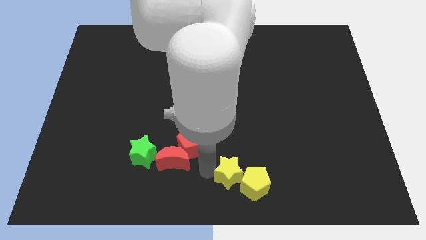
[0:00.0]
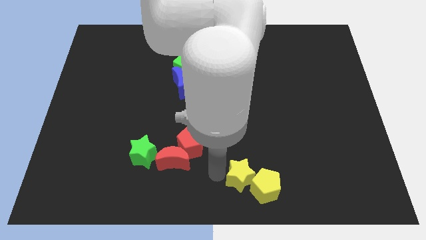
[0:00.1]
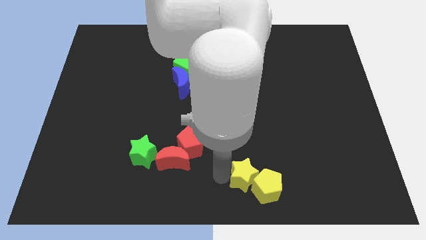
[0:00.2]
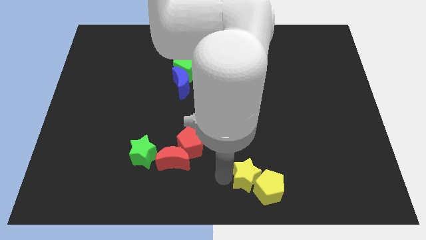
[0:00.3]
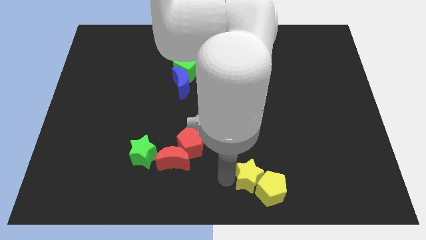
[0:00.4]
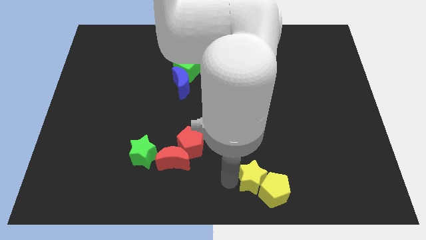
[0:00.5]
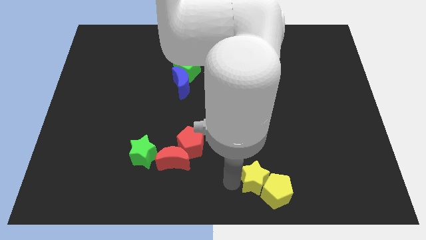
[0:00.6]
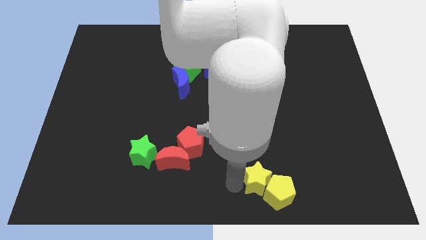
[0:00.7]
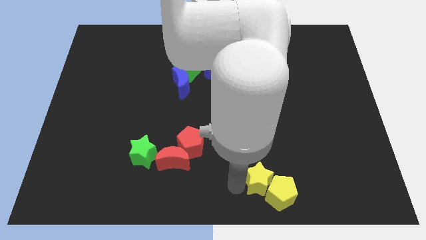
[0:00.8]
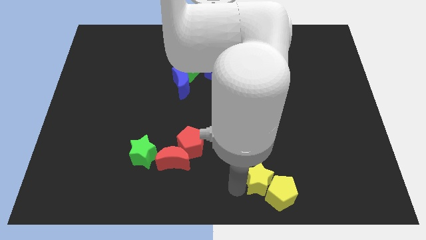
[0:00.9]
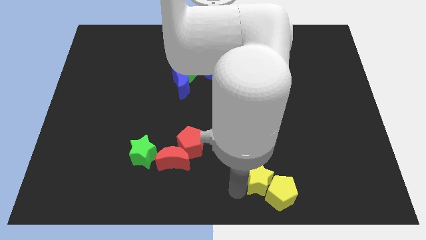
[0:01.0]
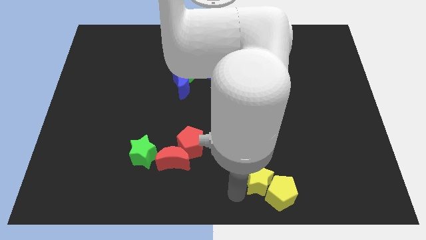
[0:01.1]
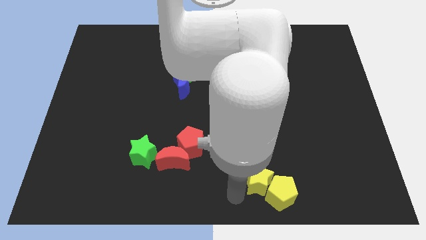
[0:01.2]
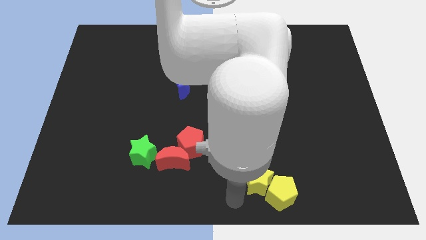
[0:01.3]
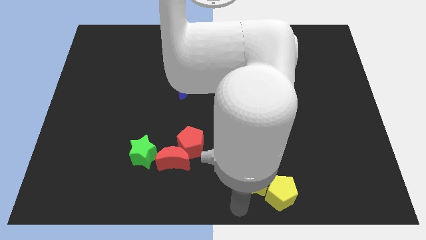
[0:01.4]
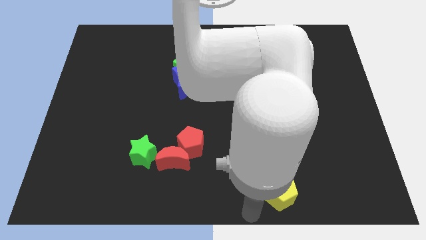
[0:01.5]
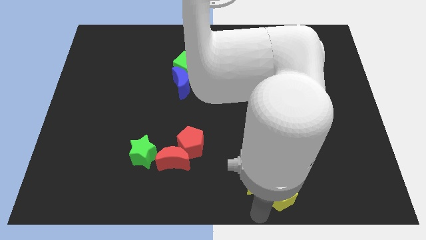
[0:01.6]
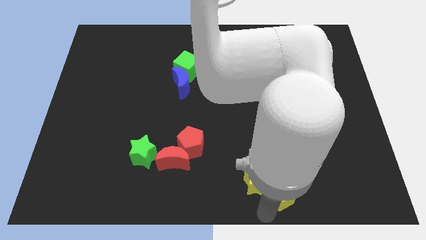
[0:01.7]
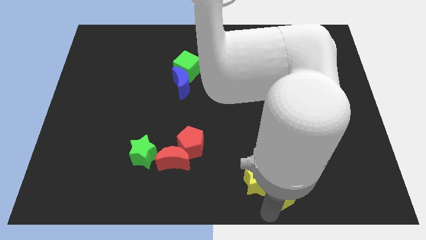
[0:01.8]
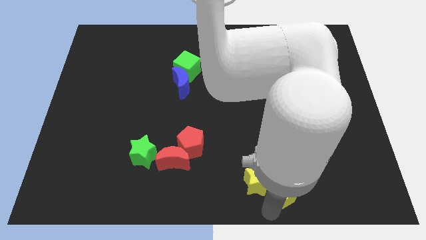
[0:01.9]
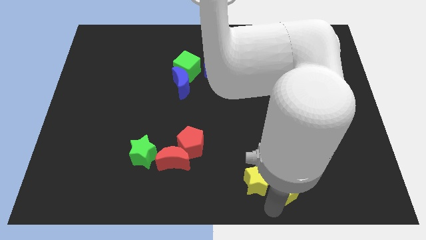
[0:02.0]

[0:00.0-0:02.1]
move the yellow blocks to the right side

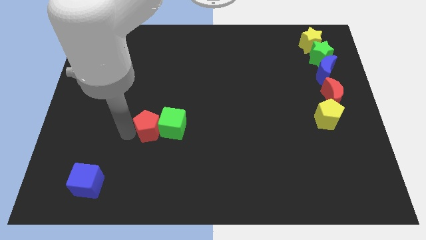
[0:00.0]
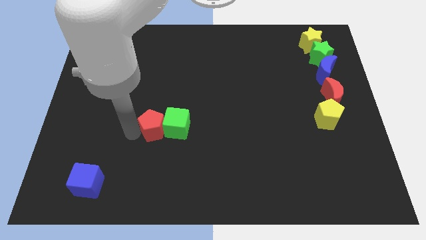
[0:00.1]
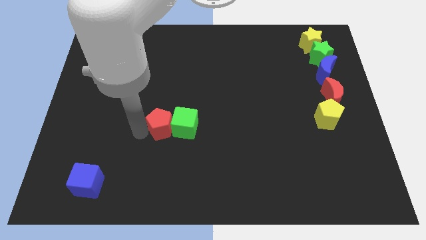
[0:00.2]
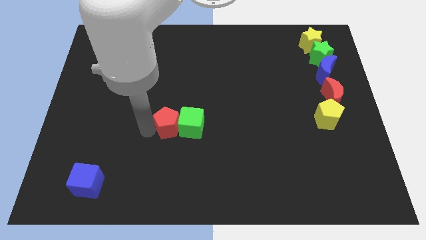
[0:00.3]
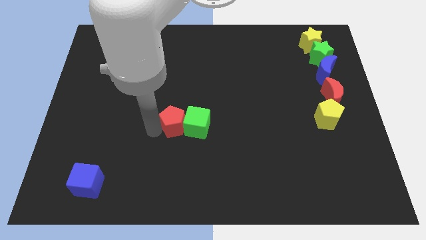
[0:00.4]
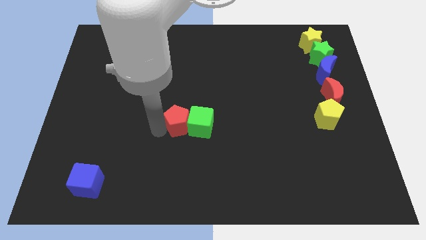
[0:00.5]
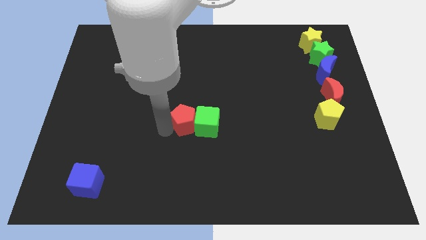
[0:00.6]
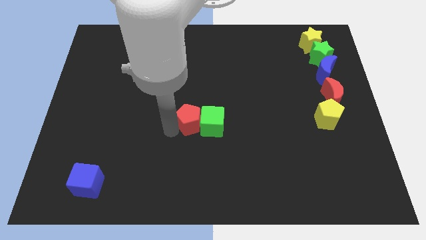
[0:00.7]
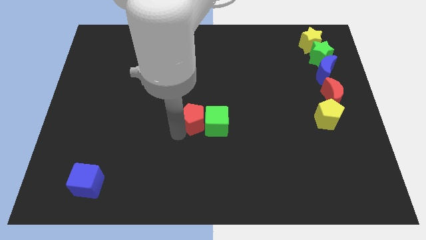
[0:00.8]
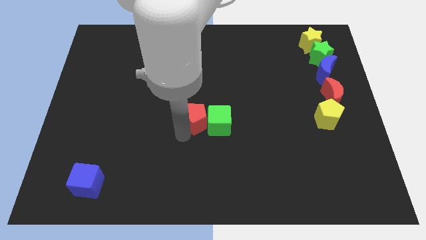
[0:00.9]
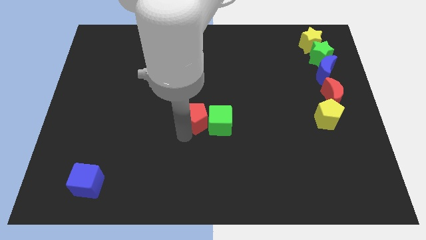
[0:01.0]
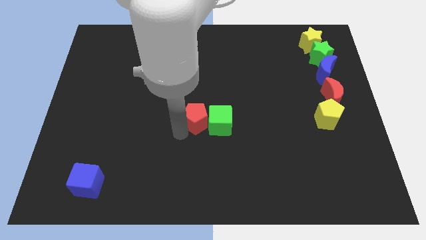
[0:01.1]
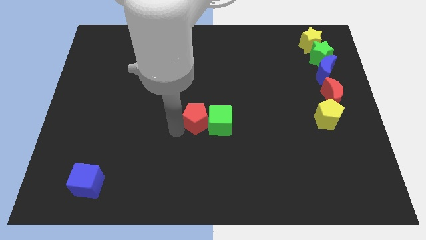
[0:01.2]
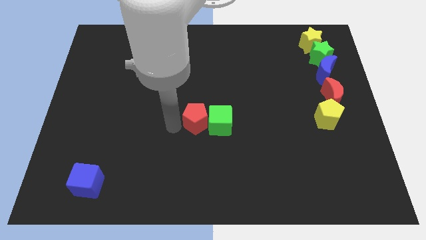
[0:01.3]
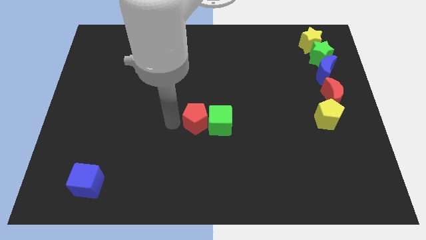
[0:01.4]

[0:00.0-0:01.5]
move the green cube and the red pentagon to the center of the board

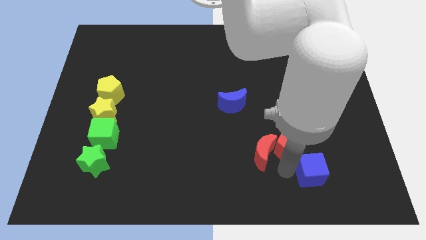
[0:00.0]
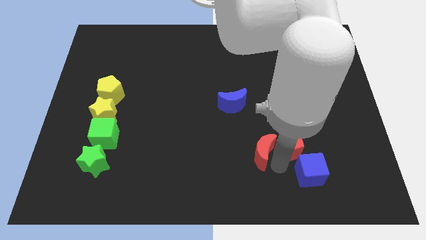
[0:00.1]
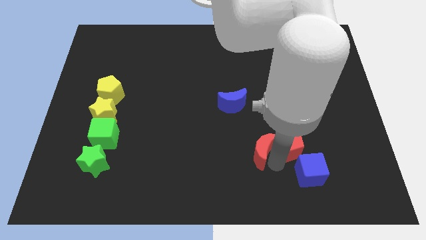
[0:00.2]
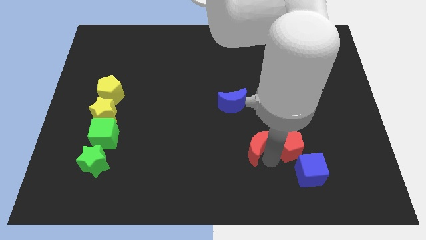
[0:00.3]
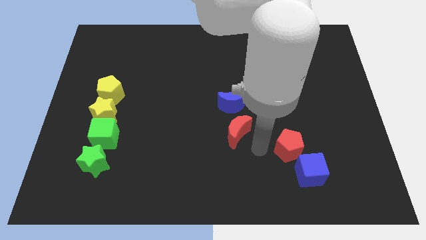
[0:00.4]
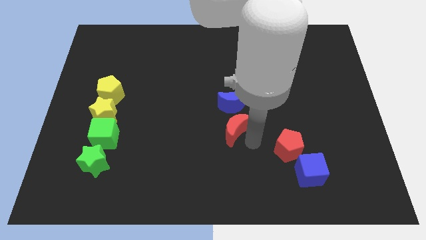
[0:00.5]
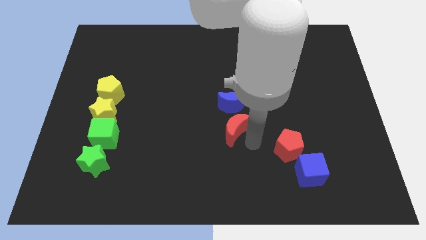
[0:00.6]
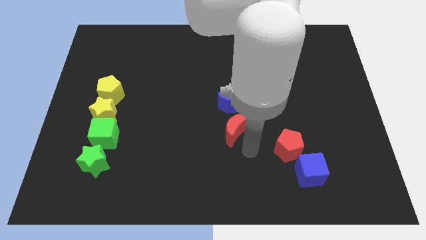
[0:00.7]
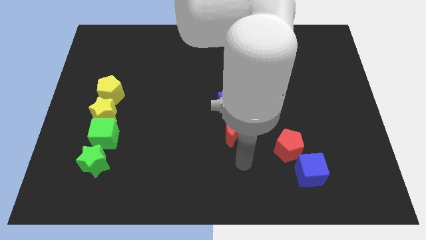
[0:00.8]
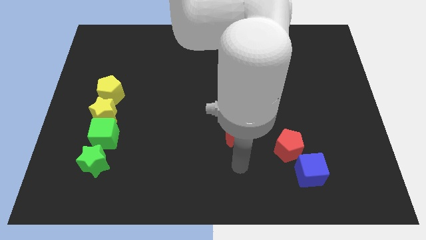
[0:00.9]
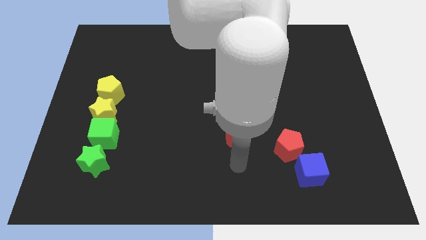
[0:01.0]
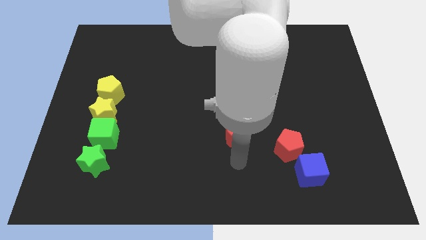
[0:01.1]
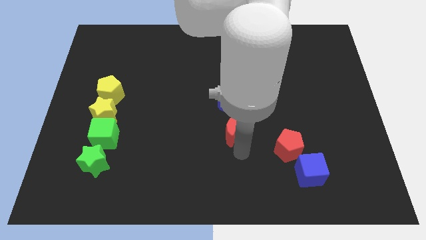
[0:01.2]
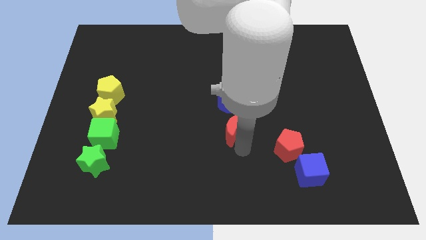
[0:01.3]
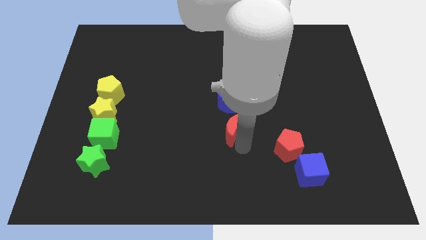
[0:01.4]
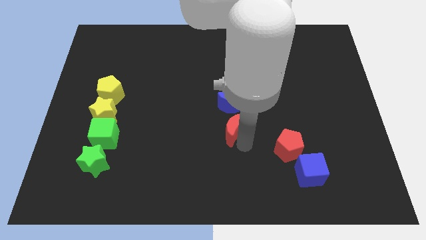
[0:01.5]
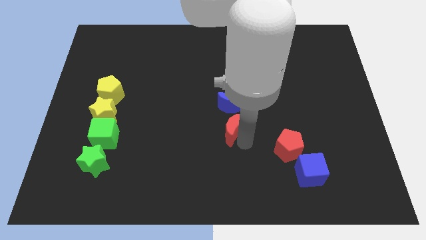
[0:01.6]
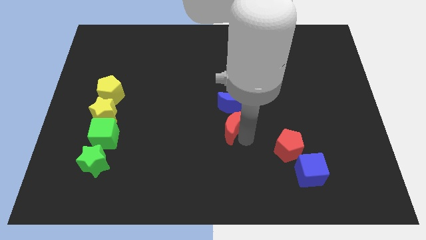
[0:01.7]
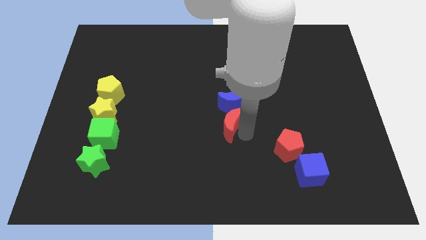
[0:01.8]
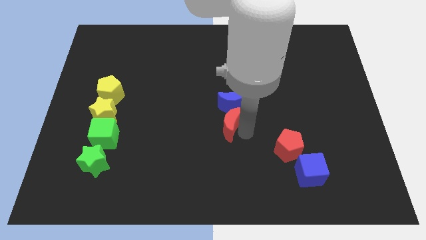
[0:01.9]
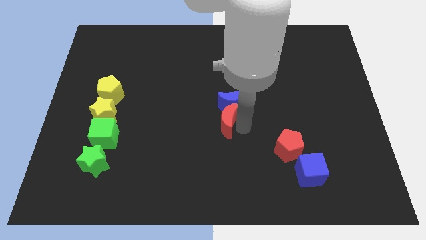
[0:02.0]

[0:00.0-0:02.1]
push red moon into blue moon

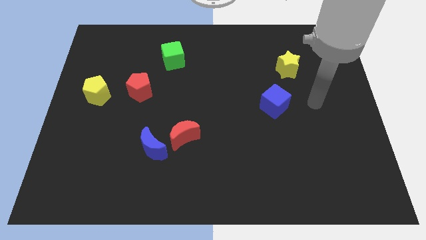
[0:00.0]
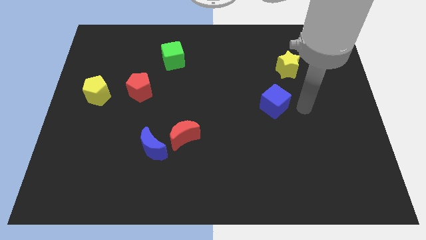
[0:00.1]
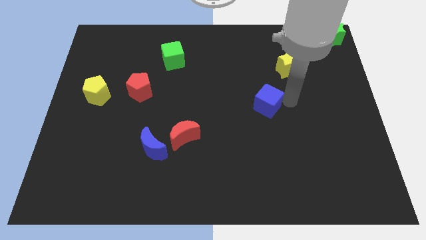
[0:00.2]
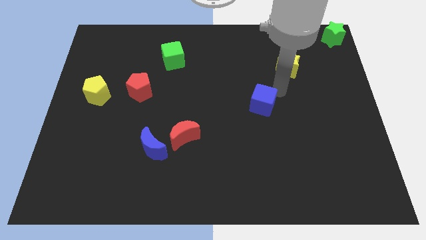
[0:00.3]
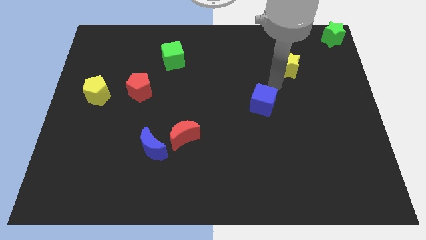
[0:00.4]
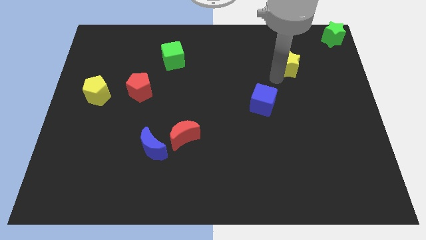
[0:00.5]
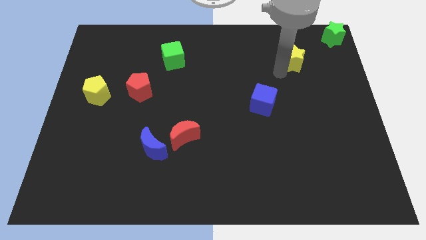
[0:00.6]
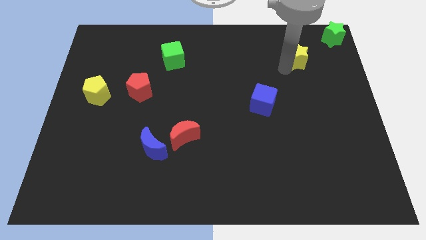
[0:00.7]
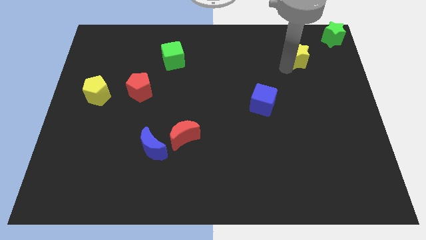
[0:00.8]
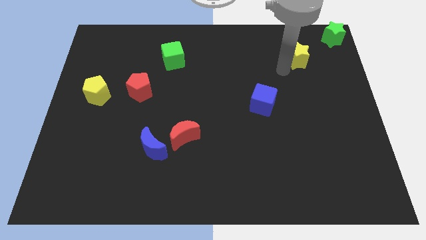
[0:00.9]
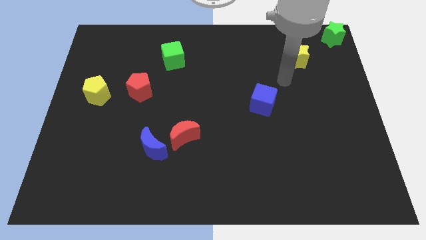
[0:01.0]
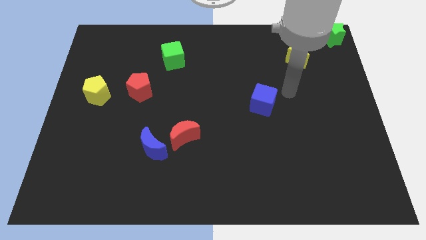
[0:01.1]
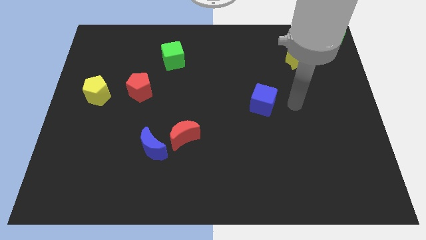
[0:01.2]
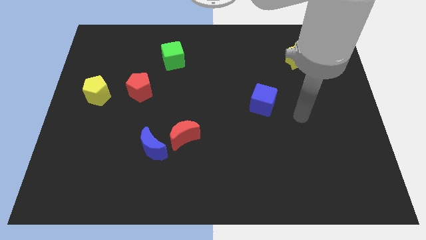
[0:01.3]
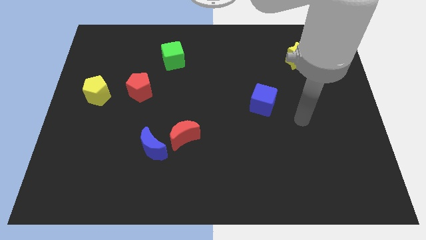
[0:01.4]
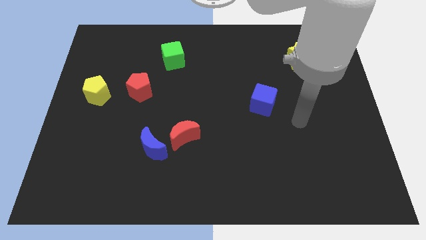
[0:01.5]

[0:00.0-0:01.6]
move the yellow star above the blue cube diagonally

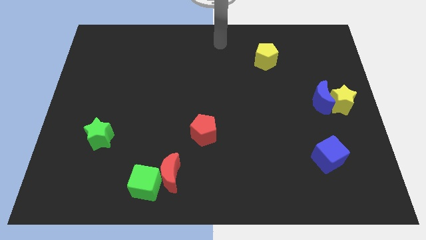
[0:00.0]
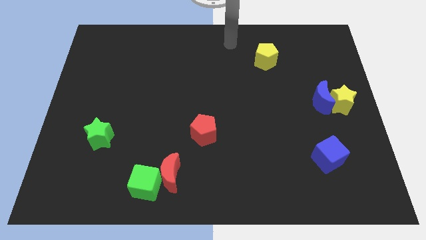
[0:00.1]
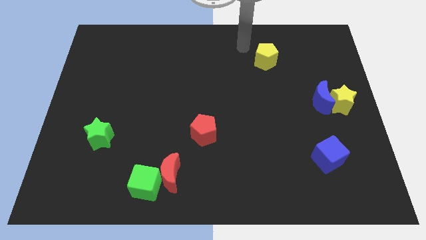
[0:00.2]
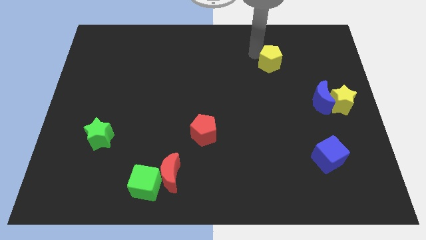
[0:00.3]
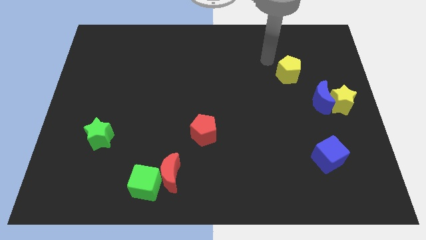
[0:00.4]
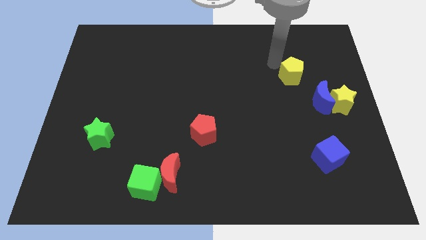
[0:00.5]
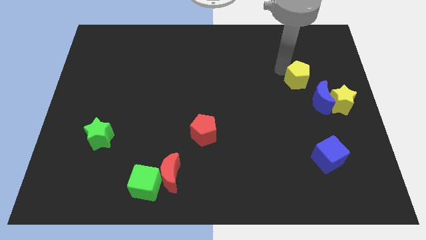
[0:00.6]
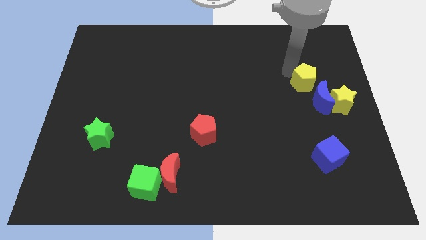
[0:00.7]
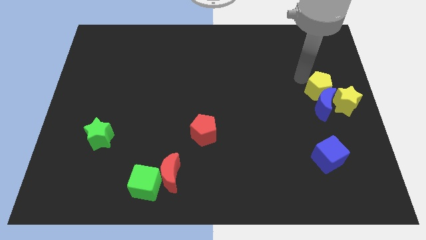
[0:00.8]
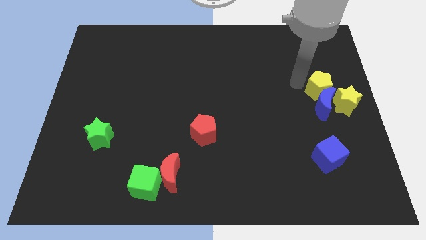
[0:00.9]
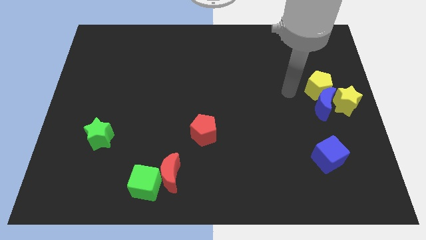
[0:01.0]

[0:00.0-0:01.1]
move the yellow pentagon to the top of the blue crescent

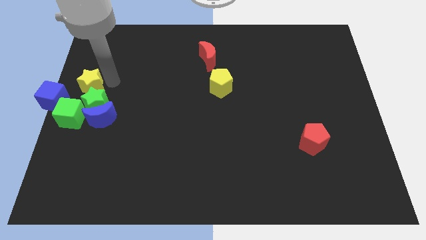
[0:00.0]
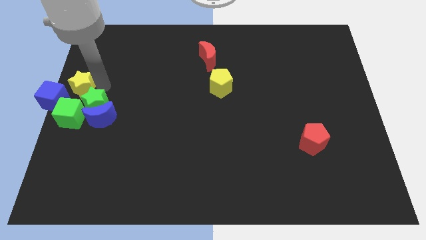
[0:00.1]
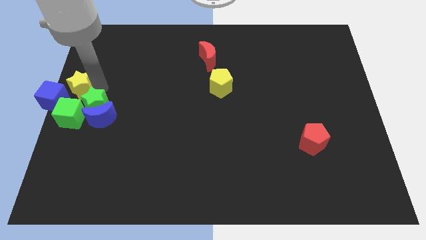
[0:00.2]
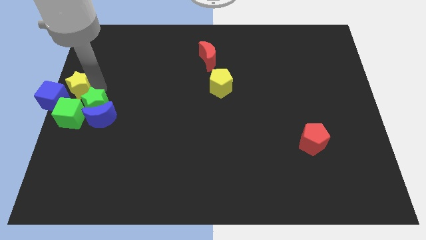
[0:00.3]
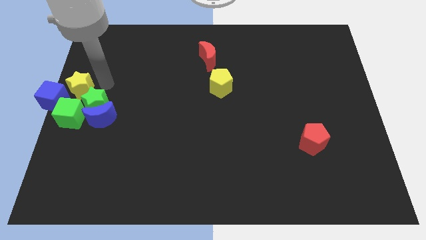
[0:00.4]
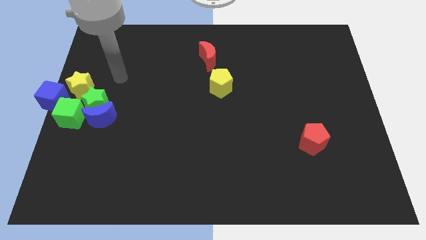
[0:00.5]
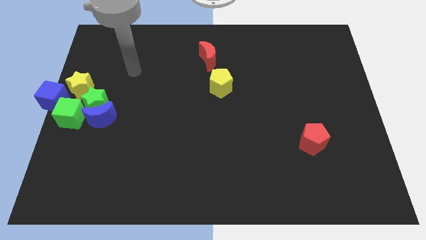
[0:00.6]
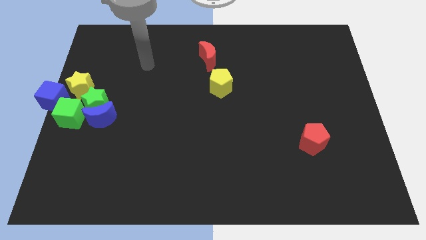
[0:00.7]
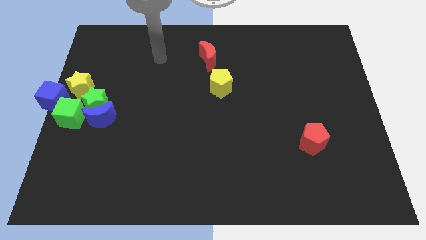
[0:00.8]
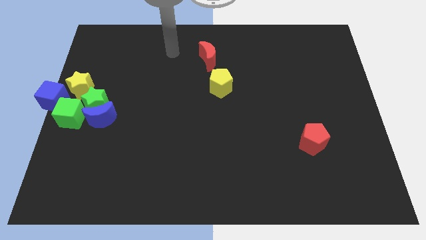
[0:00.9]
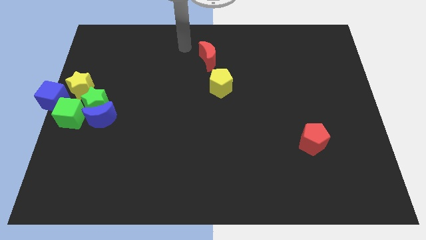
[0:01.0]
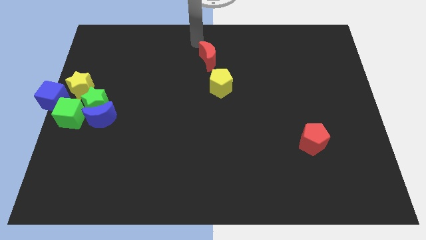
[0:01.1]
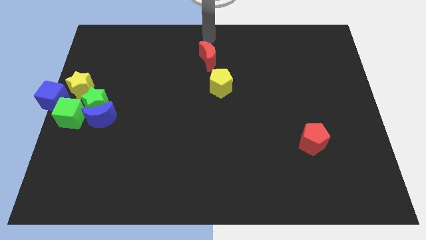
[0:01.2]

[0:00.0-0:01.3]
go near the red moon
